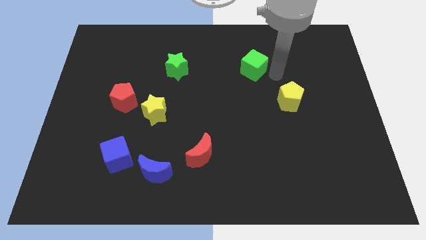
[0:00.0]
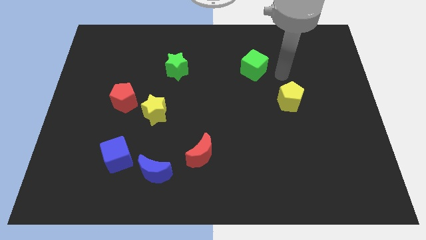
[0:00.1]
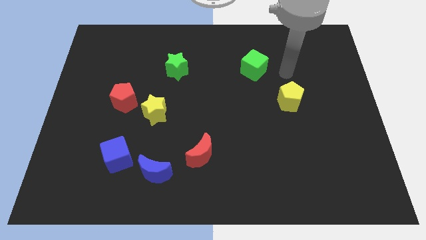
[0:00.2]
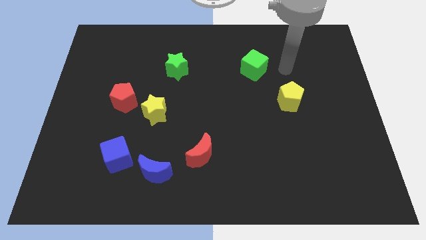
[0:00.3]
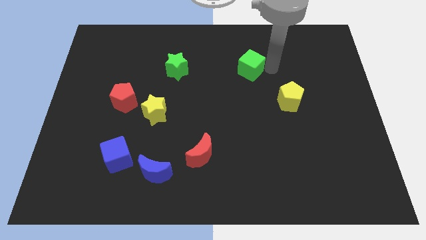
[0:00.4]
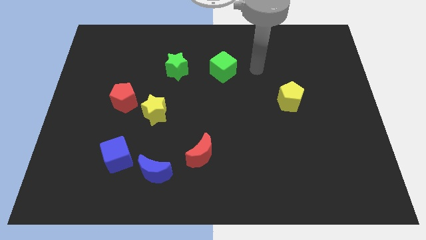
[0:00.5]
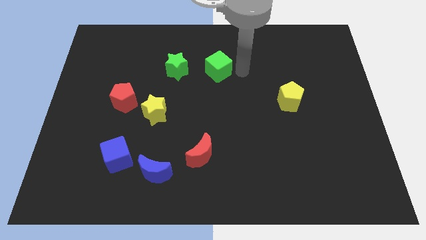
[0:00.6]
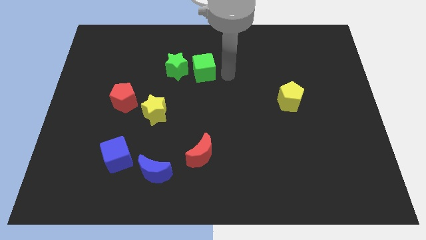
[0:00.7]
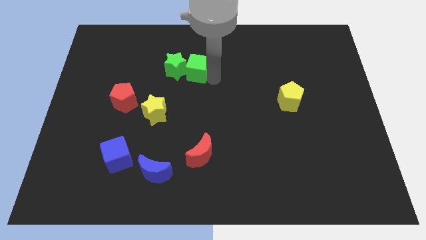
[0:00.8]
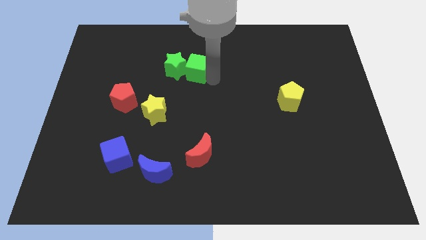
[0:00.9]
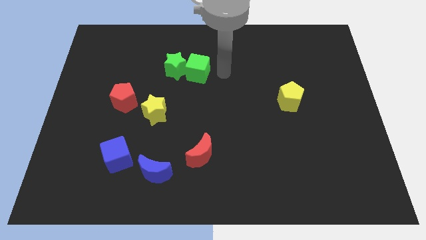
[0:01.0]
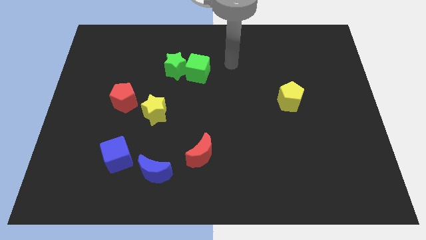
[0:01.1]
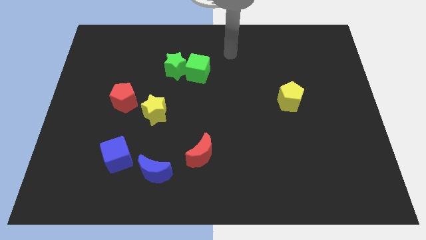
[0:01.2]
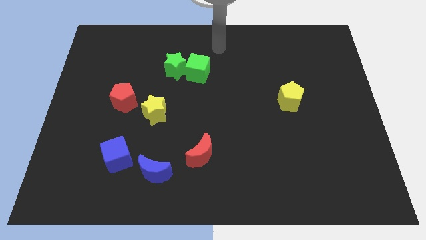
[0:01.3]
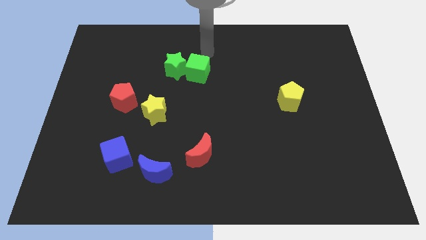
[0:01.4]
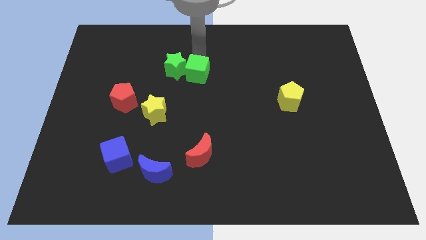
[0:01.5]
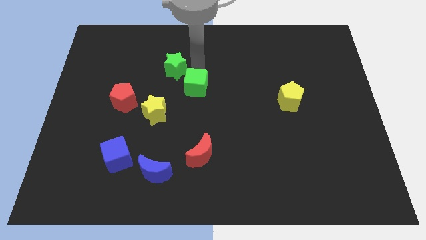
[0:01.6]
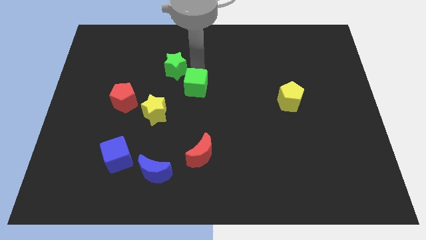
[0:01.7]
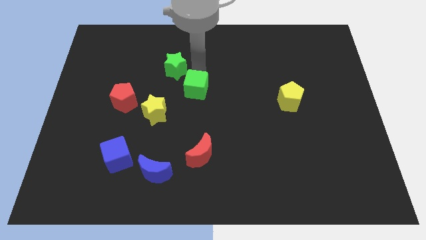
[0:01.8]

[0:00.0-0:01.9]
move the green cube towards the left side of the yellow pentagon

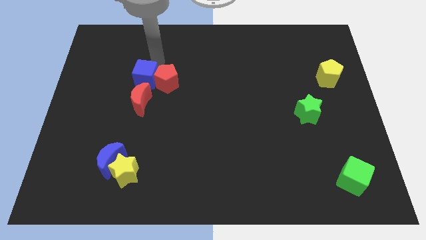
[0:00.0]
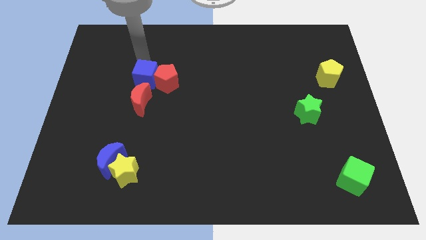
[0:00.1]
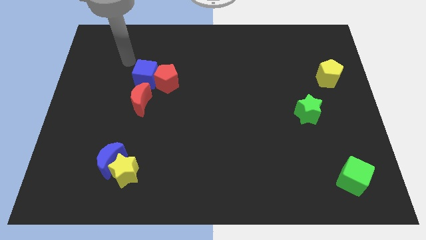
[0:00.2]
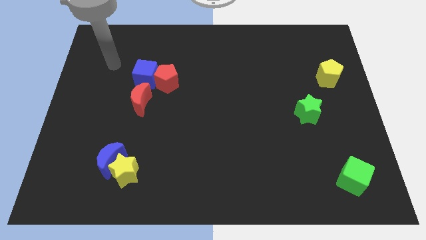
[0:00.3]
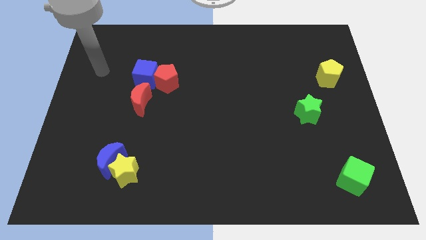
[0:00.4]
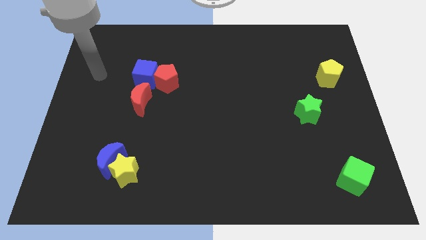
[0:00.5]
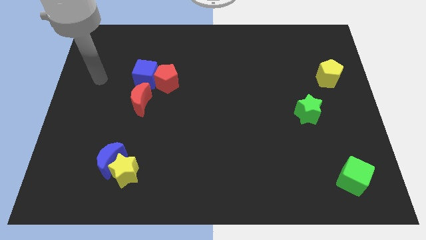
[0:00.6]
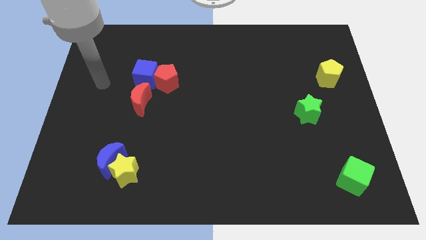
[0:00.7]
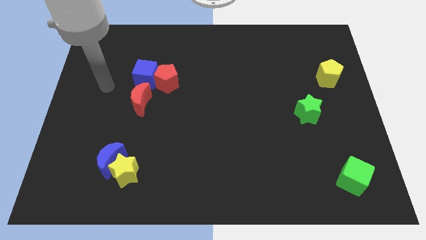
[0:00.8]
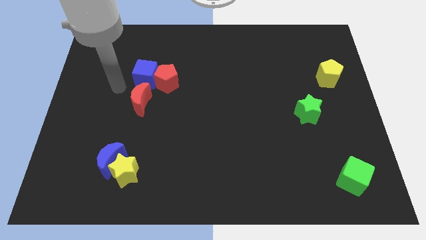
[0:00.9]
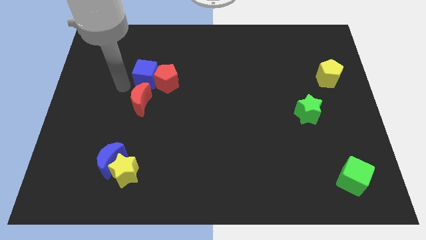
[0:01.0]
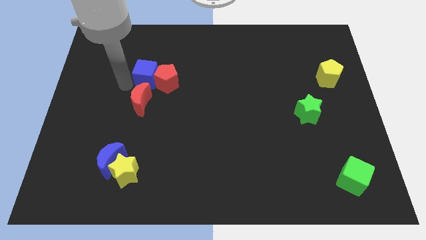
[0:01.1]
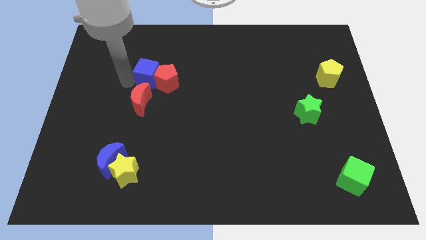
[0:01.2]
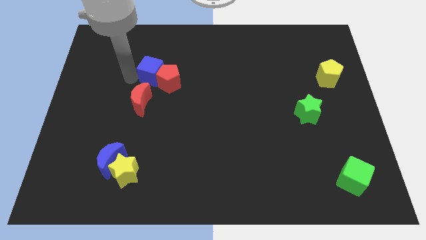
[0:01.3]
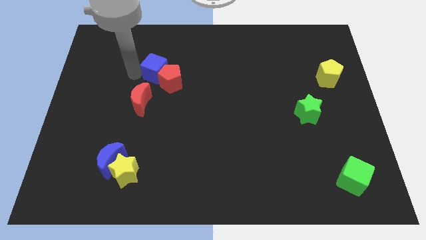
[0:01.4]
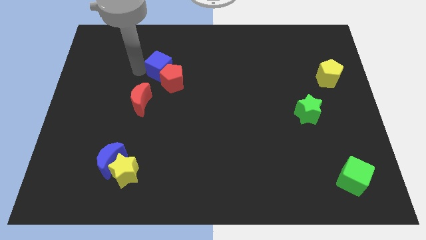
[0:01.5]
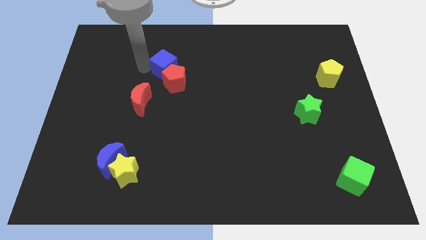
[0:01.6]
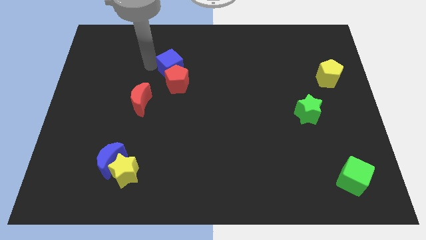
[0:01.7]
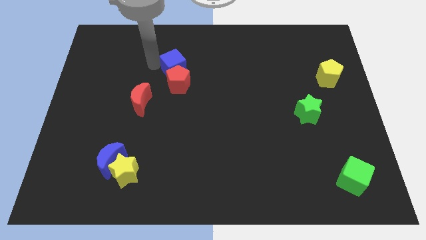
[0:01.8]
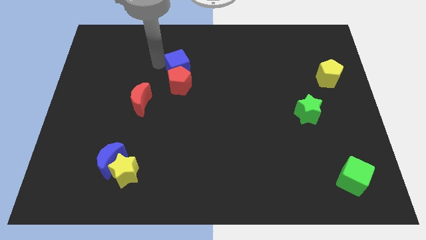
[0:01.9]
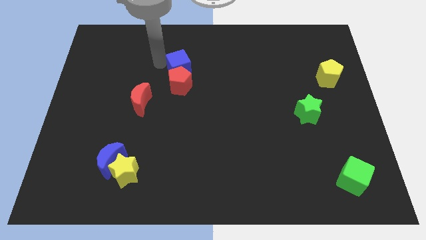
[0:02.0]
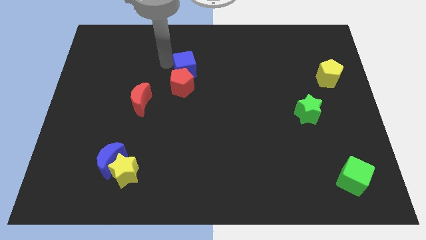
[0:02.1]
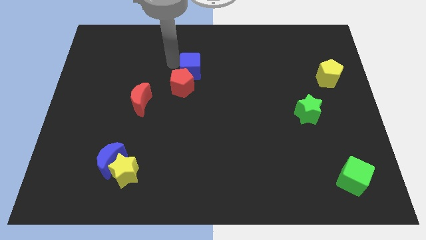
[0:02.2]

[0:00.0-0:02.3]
move the blue cube above to the red pentagon

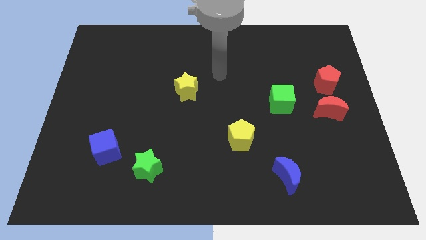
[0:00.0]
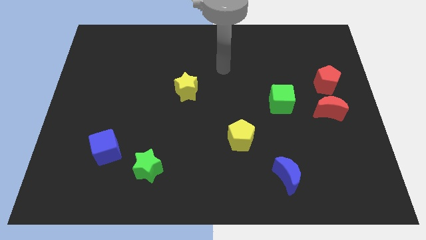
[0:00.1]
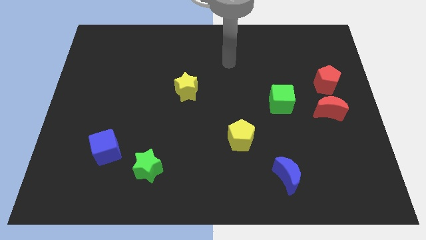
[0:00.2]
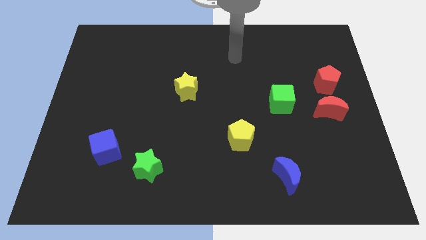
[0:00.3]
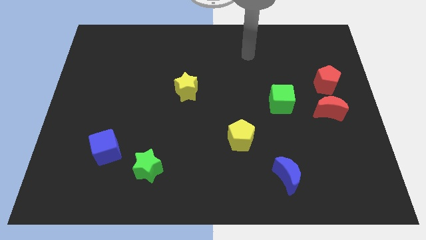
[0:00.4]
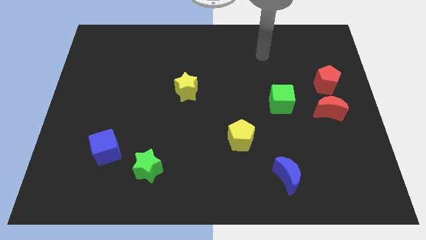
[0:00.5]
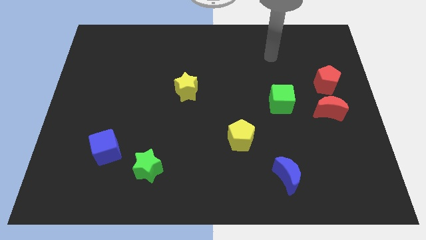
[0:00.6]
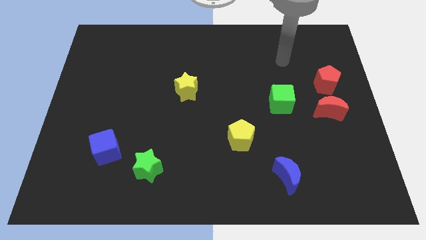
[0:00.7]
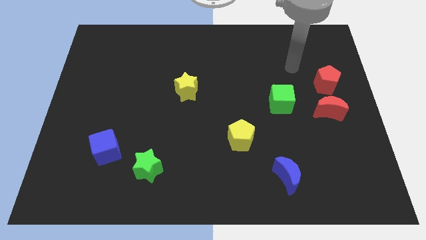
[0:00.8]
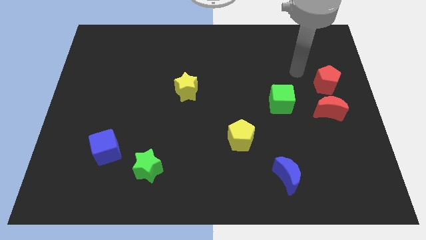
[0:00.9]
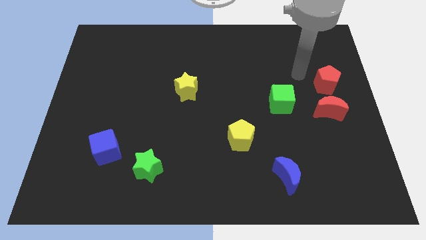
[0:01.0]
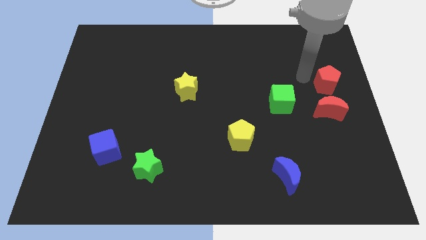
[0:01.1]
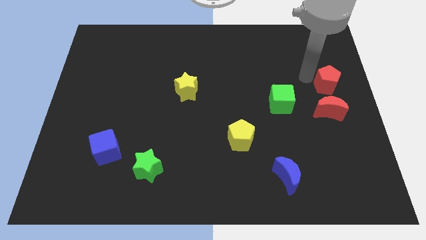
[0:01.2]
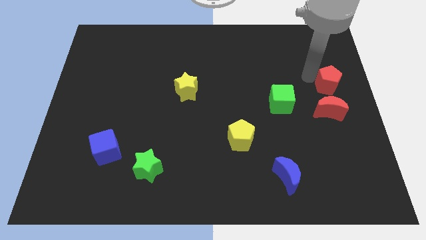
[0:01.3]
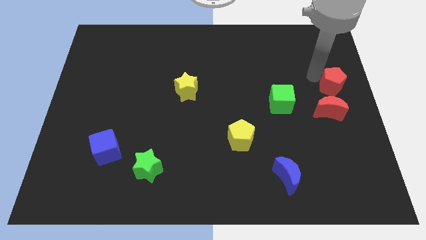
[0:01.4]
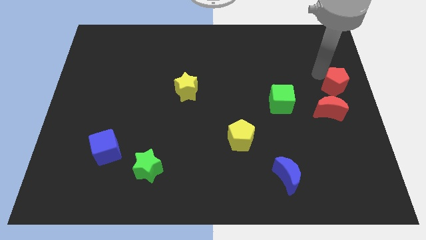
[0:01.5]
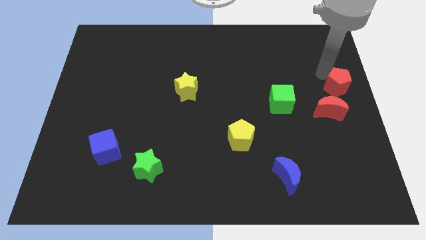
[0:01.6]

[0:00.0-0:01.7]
move red pentagon above red moon

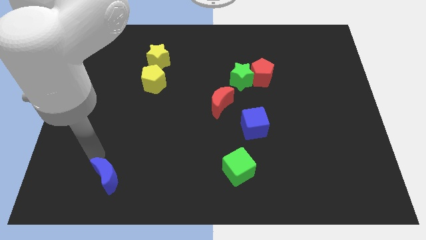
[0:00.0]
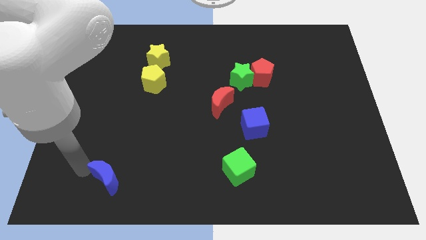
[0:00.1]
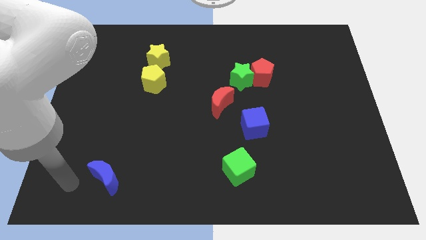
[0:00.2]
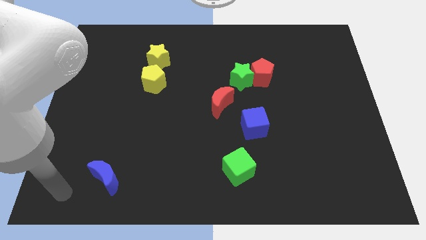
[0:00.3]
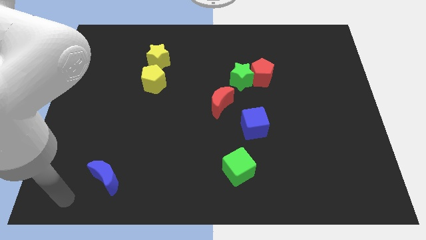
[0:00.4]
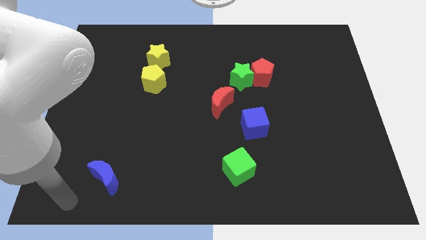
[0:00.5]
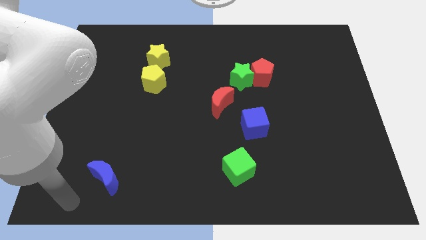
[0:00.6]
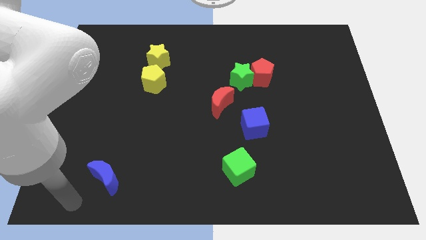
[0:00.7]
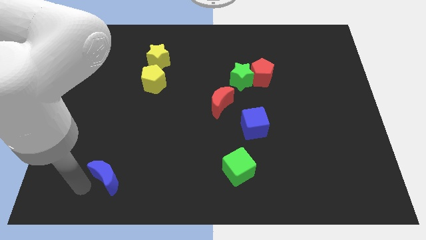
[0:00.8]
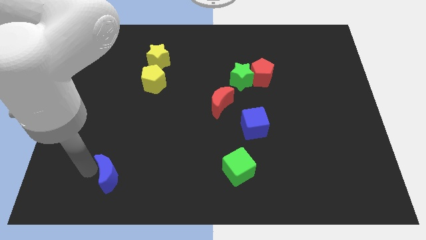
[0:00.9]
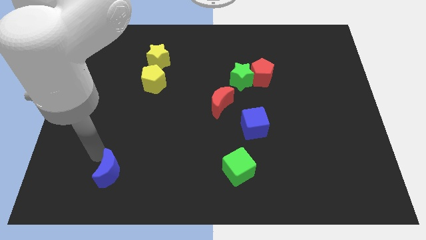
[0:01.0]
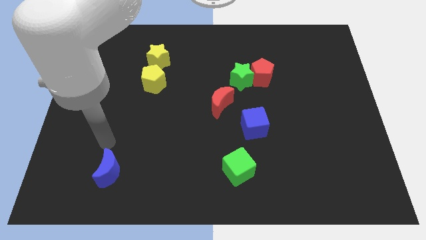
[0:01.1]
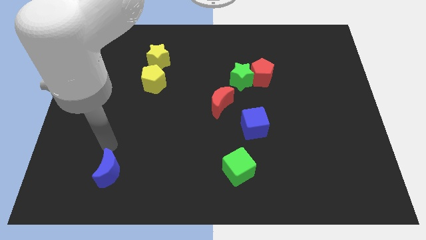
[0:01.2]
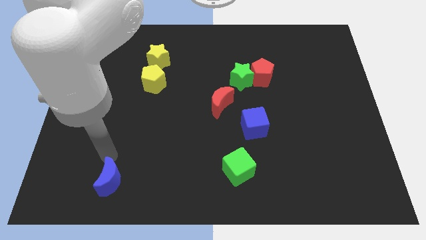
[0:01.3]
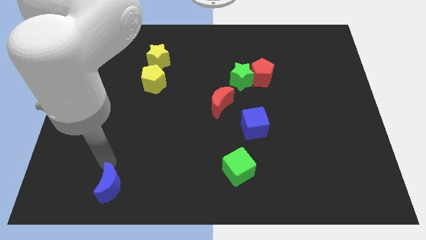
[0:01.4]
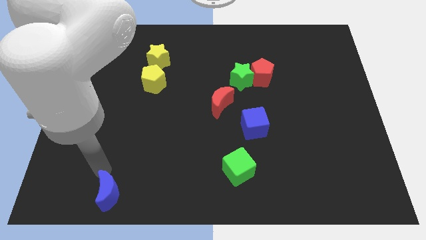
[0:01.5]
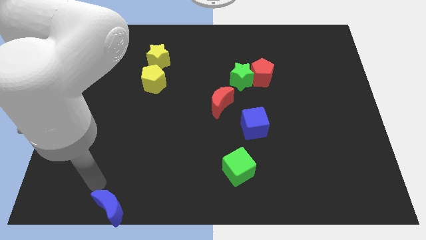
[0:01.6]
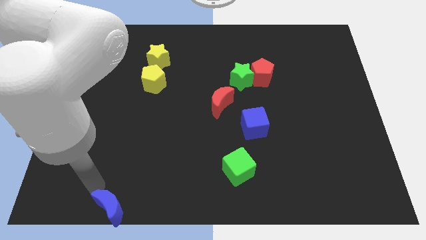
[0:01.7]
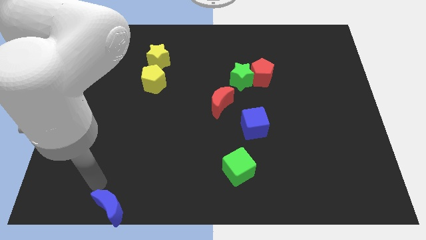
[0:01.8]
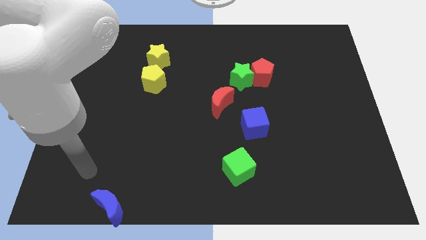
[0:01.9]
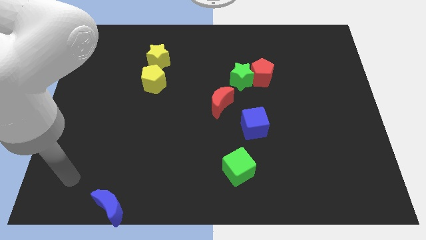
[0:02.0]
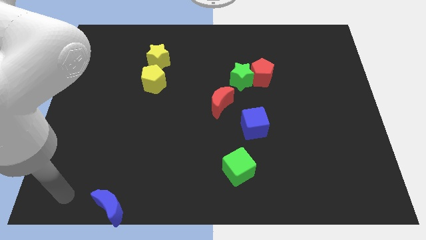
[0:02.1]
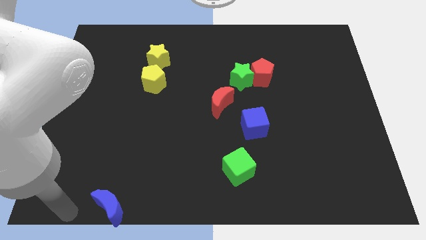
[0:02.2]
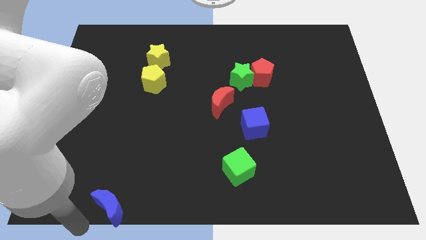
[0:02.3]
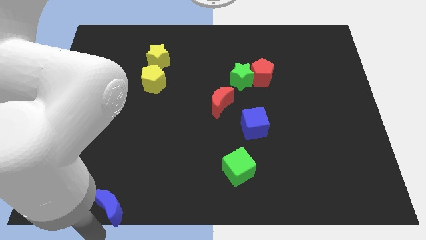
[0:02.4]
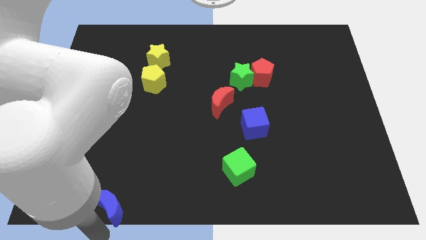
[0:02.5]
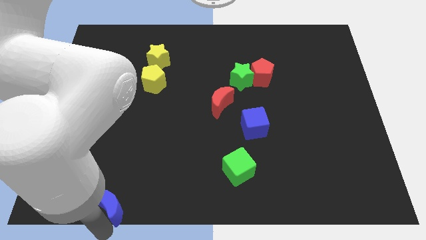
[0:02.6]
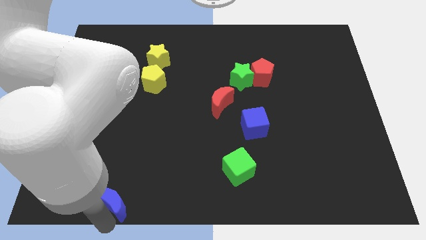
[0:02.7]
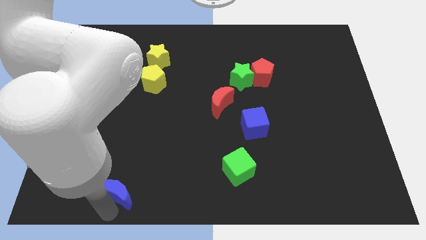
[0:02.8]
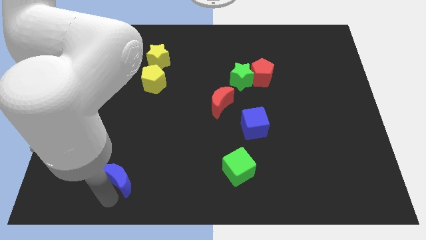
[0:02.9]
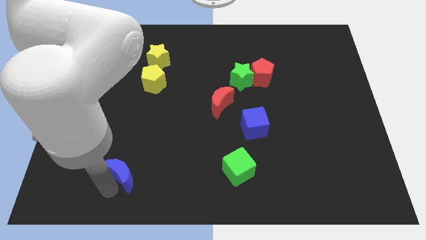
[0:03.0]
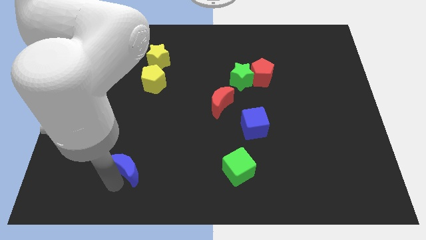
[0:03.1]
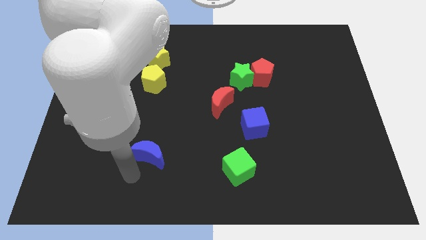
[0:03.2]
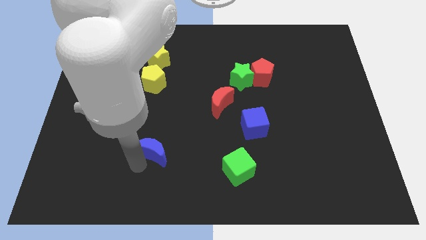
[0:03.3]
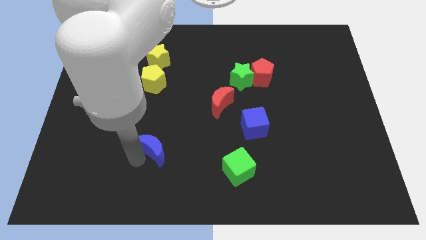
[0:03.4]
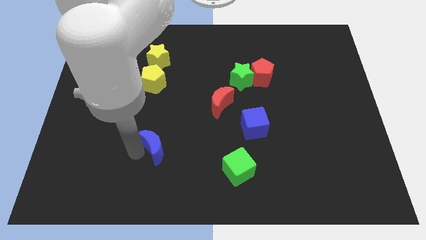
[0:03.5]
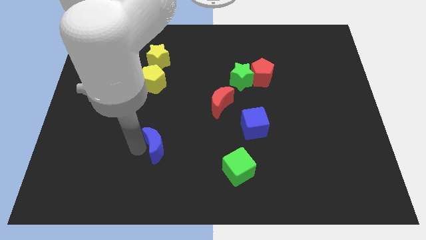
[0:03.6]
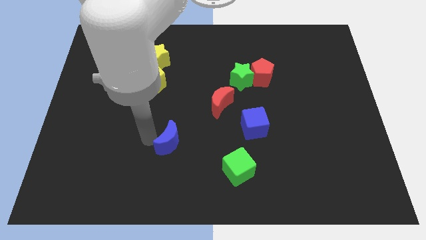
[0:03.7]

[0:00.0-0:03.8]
slide the blue crescent diagonally towards the center of the board
